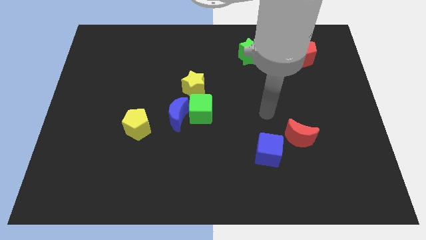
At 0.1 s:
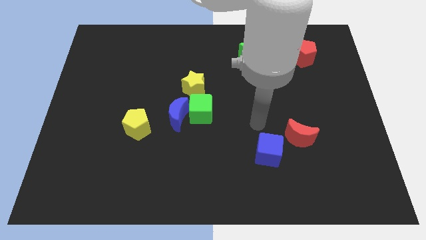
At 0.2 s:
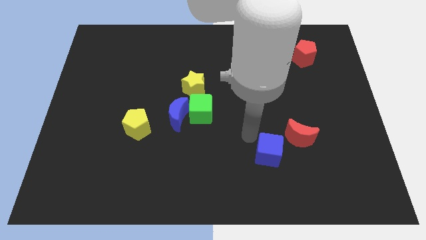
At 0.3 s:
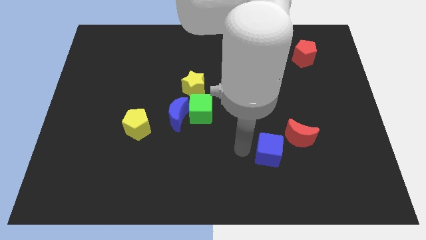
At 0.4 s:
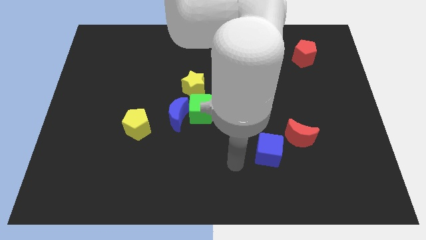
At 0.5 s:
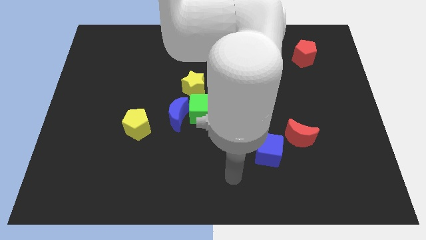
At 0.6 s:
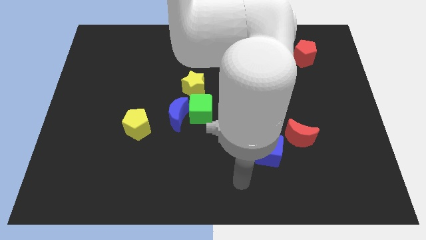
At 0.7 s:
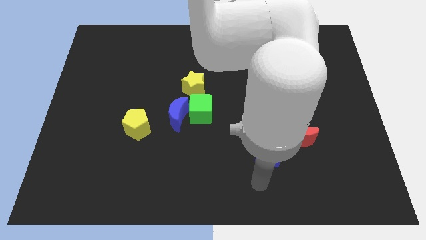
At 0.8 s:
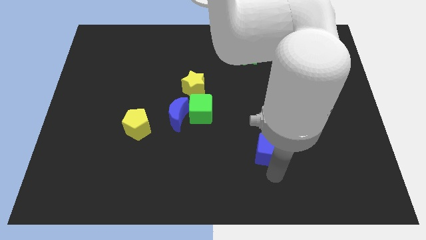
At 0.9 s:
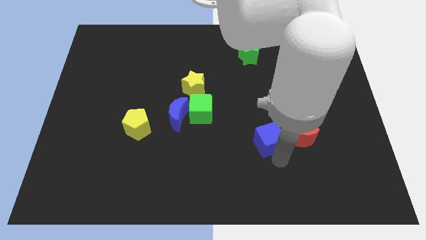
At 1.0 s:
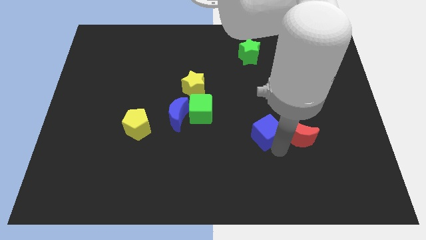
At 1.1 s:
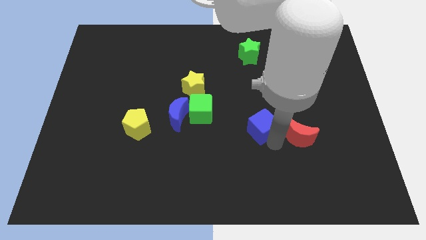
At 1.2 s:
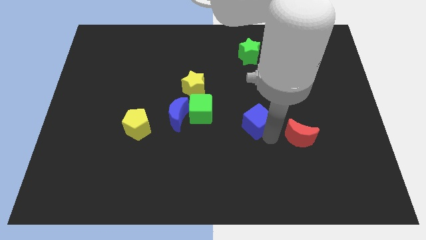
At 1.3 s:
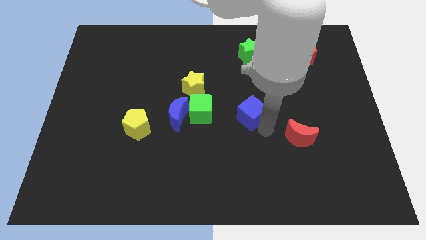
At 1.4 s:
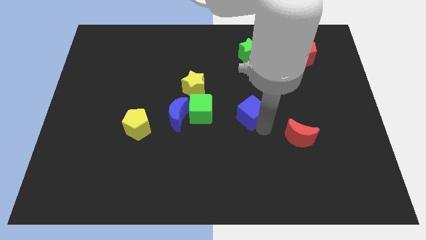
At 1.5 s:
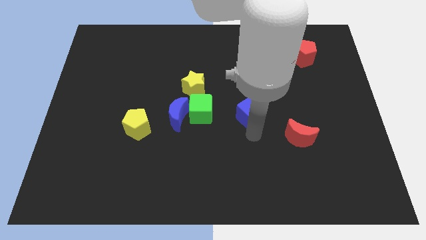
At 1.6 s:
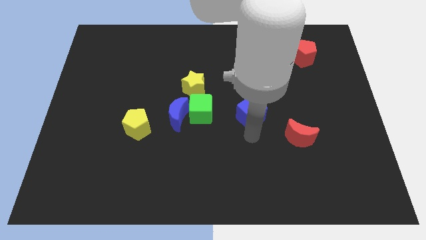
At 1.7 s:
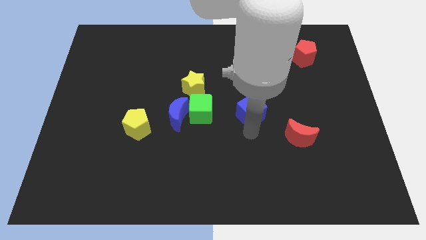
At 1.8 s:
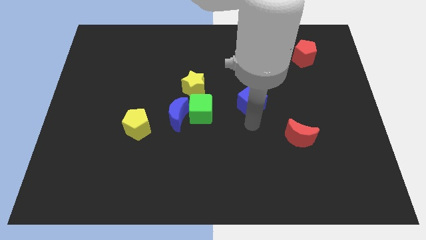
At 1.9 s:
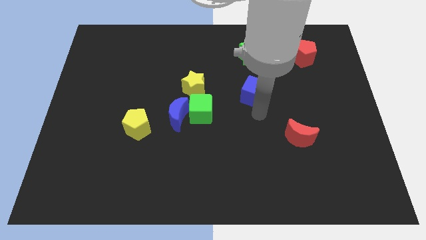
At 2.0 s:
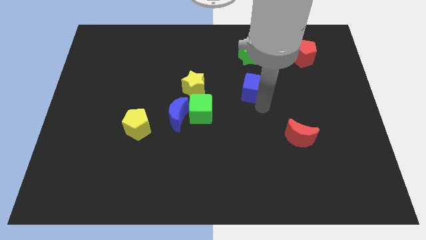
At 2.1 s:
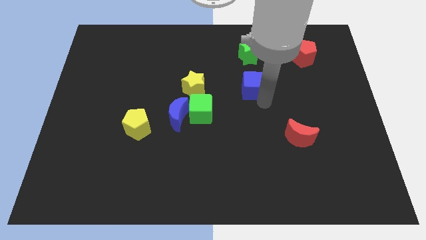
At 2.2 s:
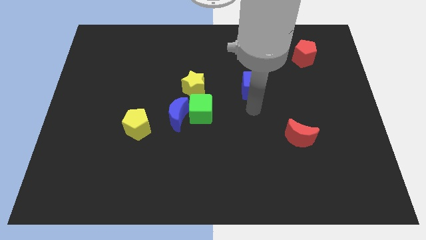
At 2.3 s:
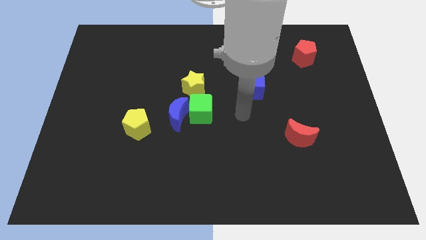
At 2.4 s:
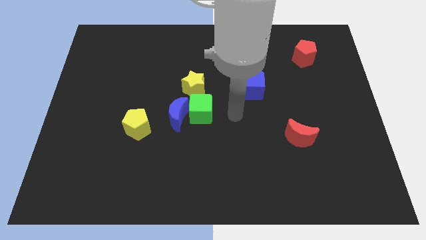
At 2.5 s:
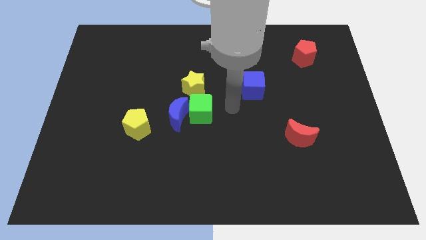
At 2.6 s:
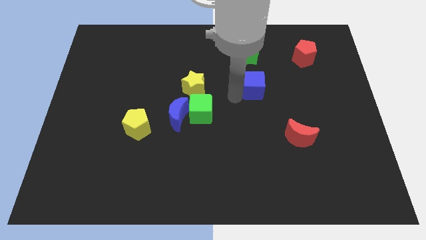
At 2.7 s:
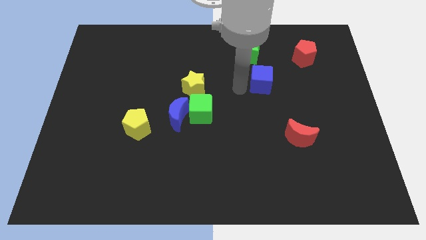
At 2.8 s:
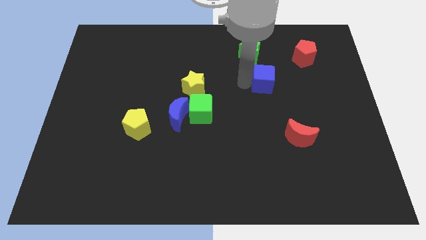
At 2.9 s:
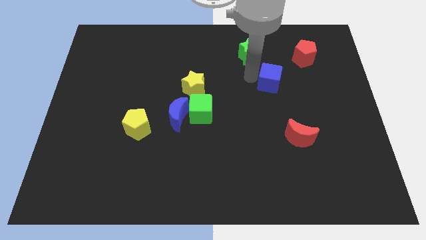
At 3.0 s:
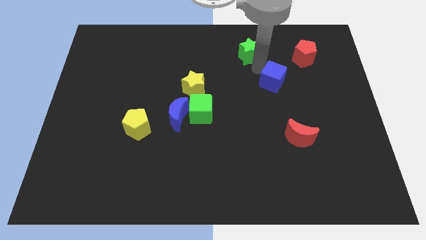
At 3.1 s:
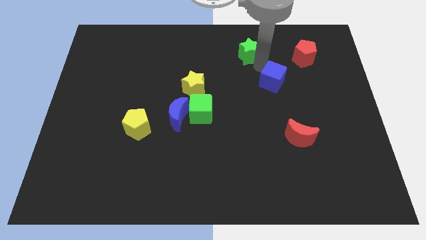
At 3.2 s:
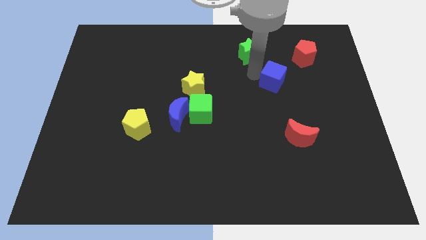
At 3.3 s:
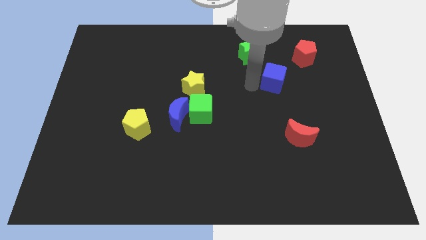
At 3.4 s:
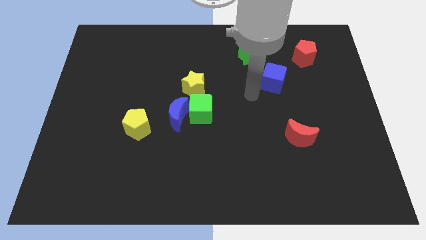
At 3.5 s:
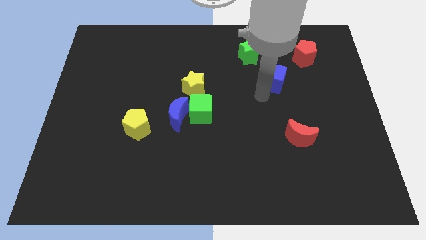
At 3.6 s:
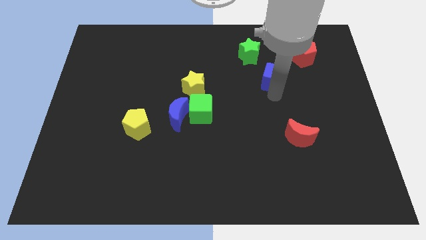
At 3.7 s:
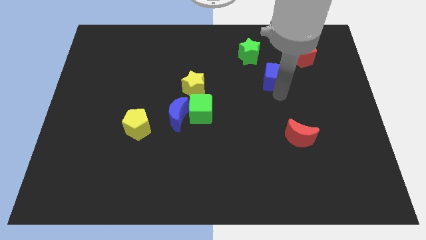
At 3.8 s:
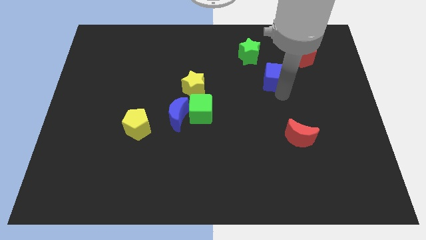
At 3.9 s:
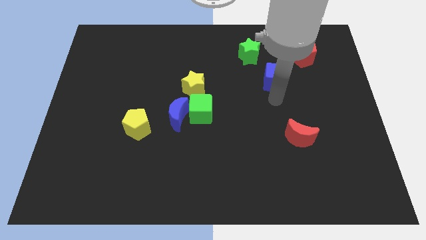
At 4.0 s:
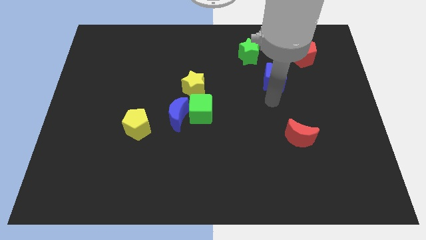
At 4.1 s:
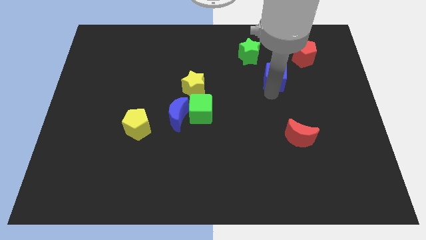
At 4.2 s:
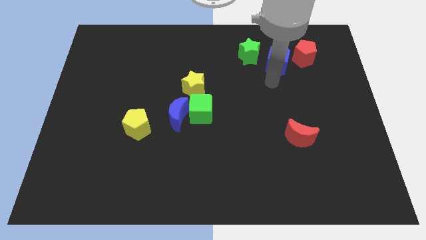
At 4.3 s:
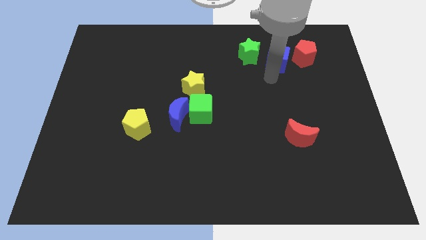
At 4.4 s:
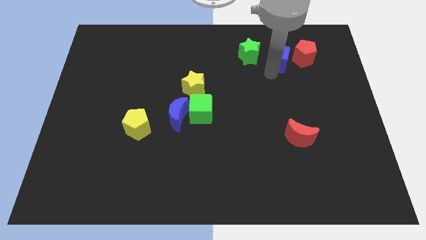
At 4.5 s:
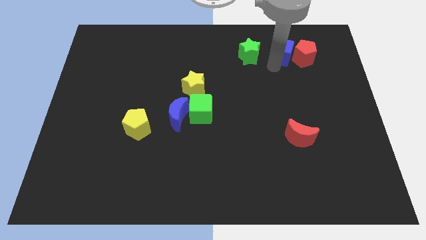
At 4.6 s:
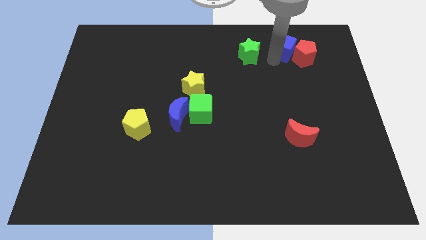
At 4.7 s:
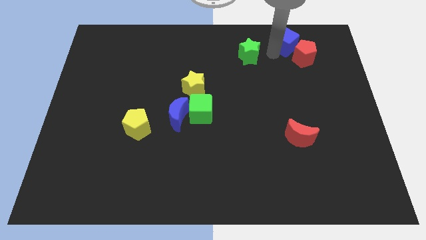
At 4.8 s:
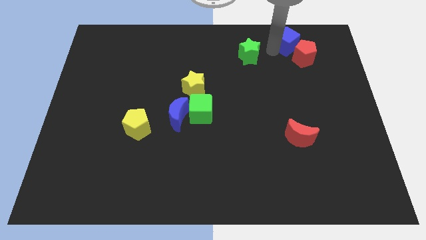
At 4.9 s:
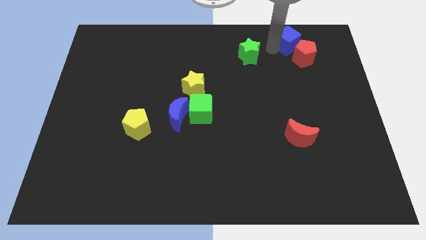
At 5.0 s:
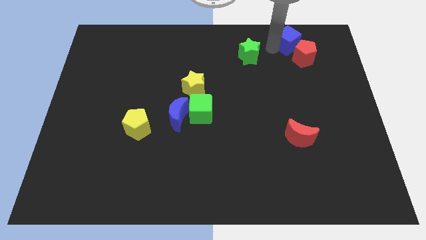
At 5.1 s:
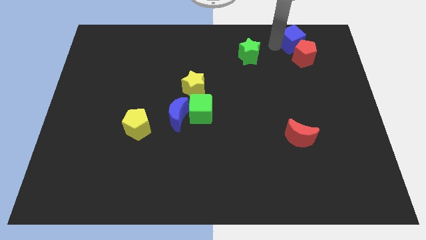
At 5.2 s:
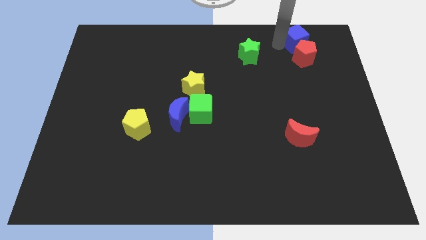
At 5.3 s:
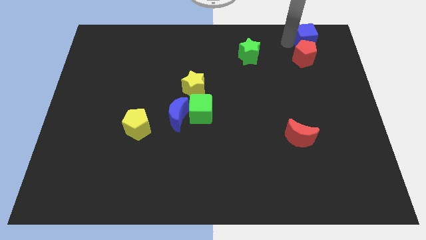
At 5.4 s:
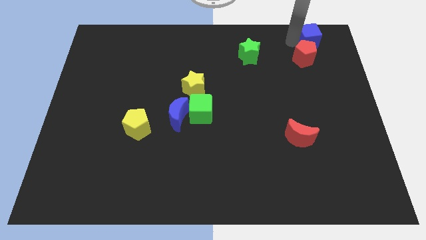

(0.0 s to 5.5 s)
place the blue cube above the red pentagon

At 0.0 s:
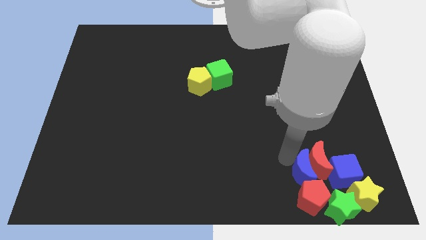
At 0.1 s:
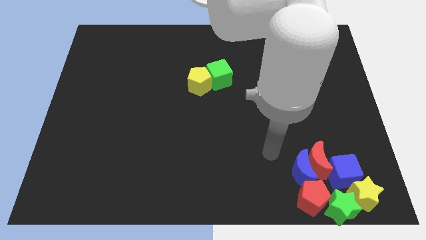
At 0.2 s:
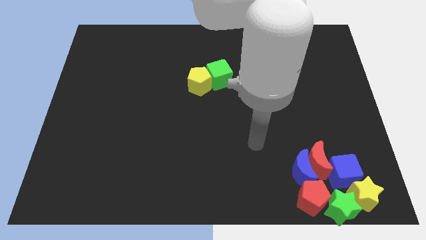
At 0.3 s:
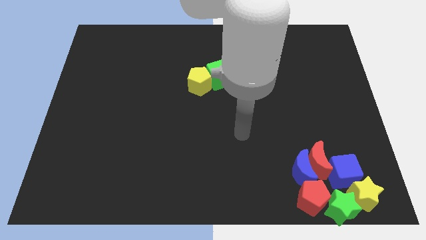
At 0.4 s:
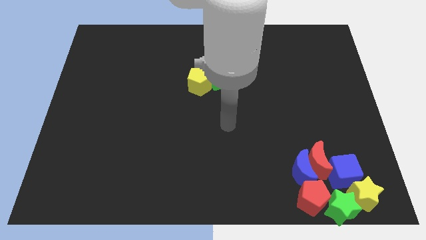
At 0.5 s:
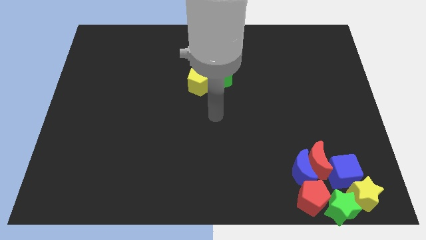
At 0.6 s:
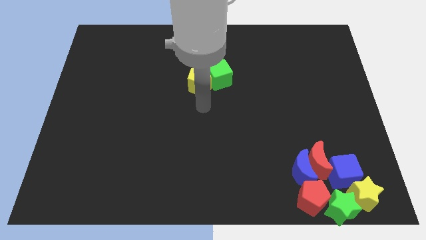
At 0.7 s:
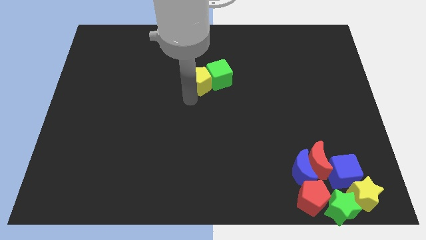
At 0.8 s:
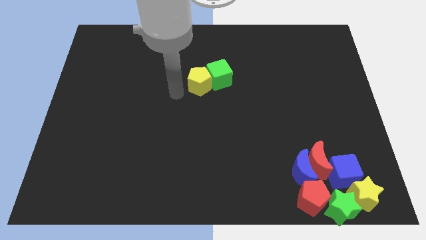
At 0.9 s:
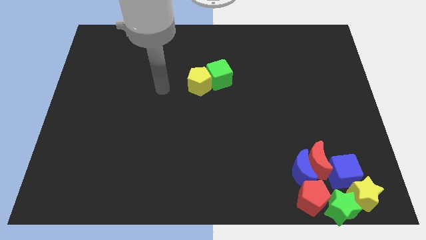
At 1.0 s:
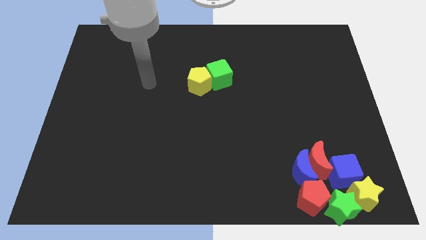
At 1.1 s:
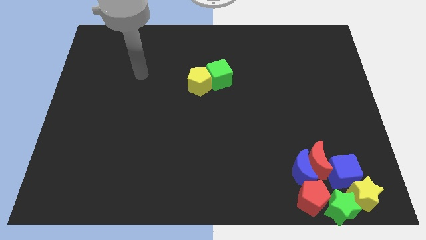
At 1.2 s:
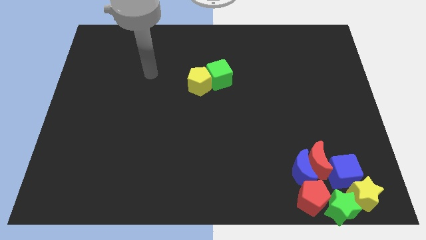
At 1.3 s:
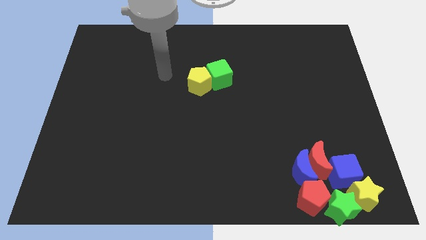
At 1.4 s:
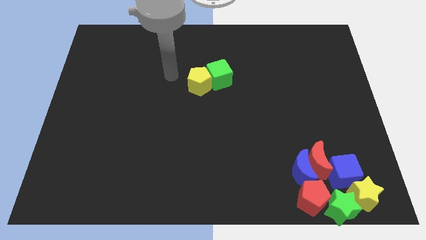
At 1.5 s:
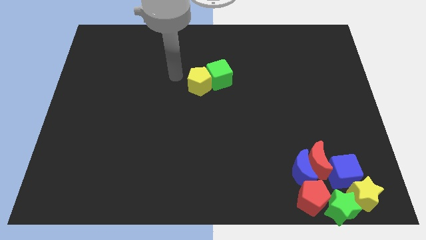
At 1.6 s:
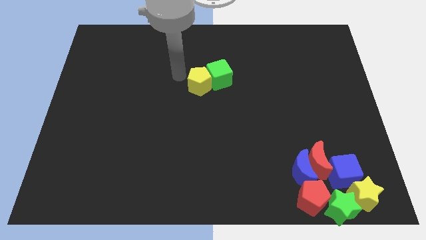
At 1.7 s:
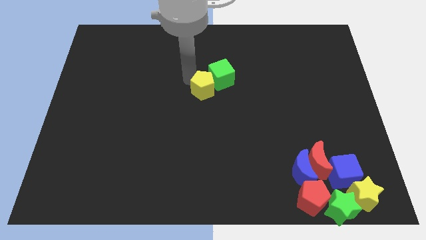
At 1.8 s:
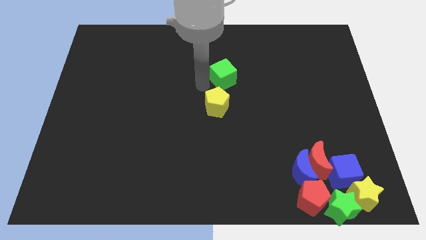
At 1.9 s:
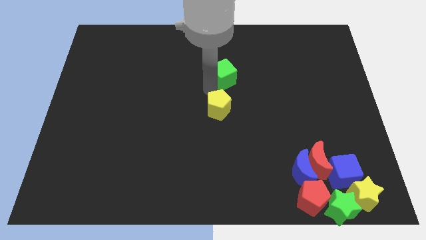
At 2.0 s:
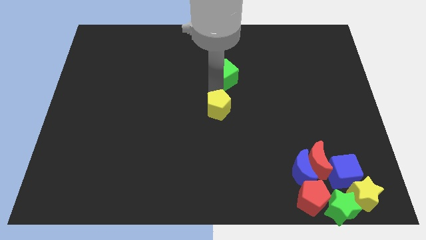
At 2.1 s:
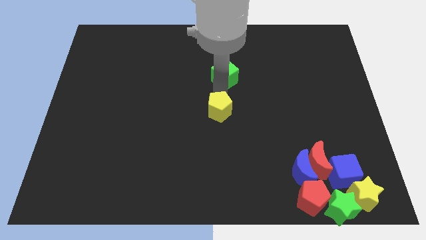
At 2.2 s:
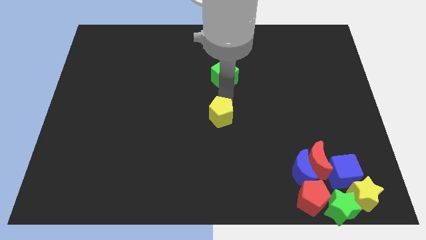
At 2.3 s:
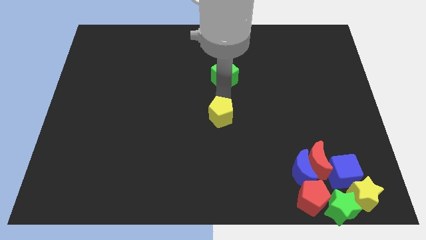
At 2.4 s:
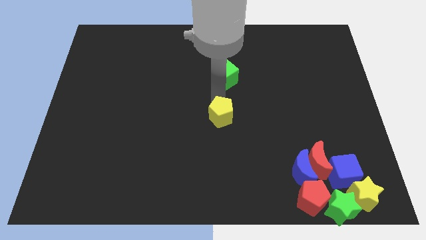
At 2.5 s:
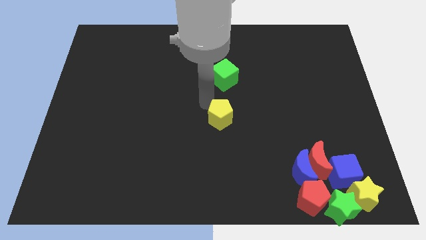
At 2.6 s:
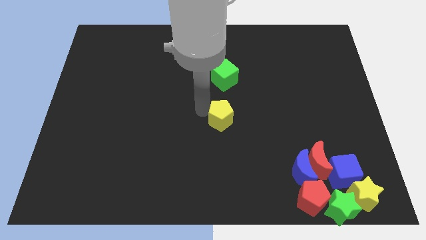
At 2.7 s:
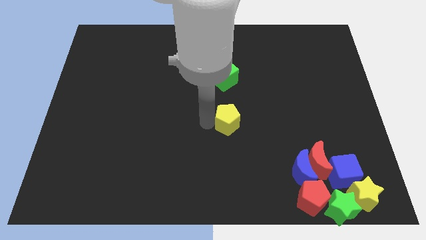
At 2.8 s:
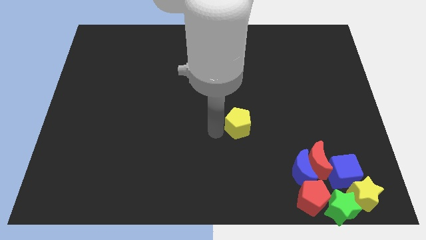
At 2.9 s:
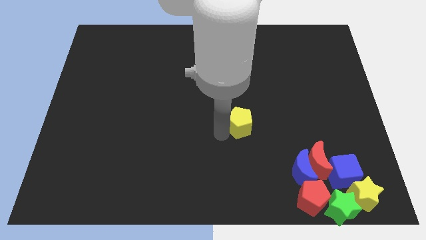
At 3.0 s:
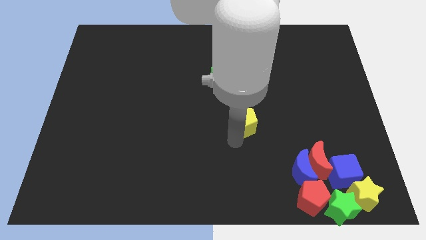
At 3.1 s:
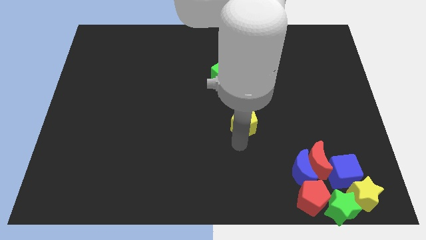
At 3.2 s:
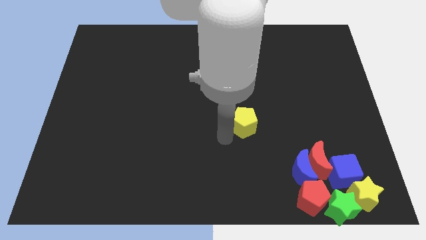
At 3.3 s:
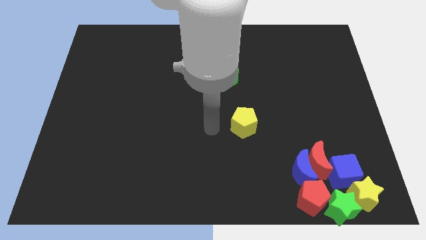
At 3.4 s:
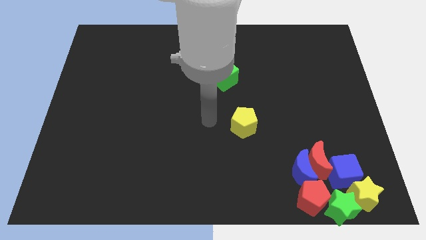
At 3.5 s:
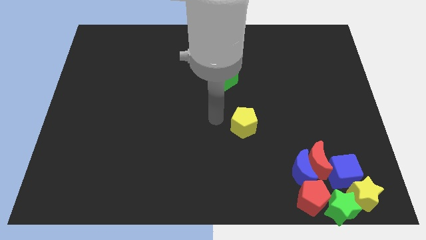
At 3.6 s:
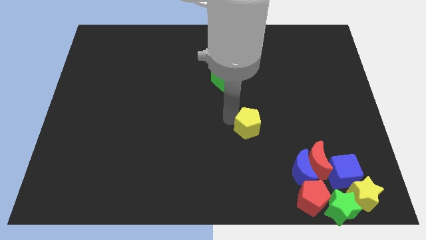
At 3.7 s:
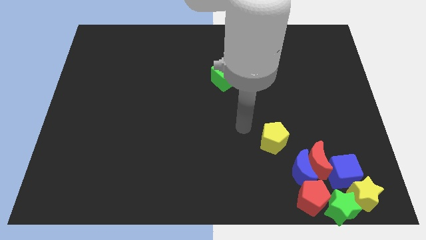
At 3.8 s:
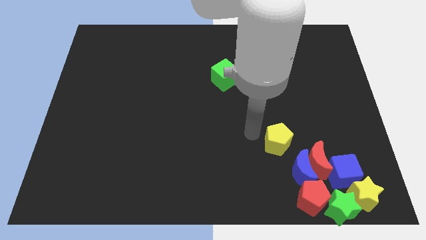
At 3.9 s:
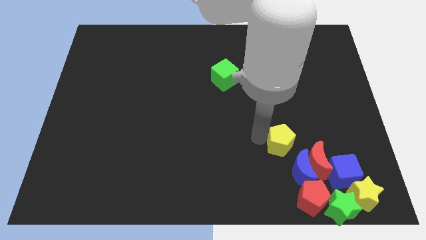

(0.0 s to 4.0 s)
place the yellow pentagon above the blue moon
